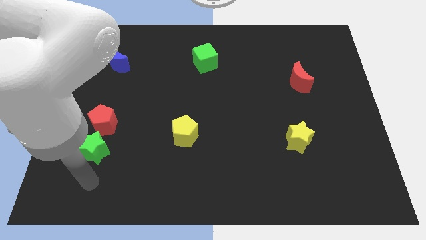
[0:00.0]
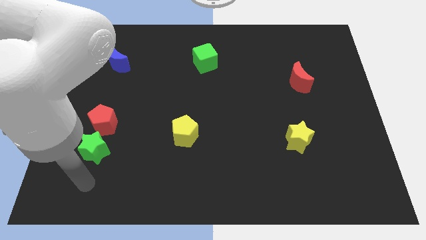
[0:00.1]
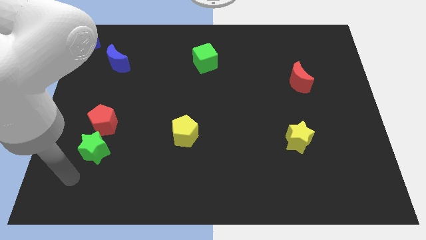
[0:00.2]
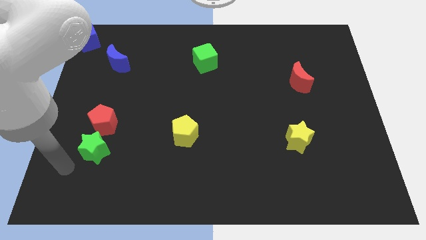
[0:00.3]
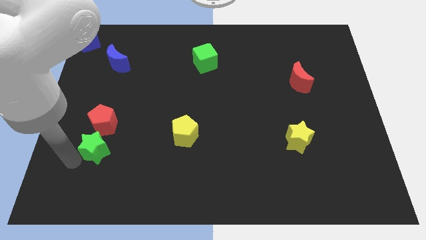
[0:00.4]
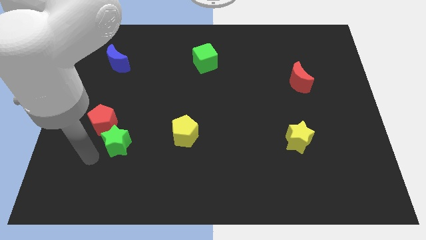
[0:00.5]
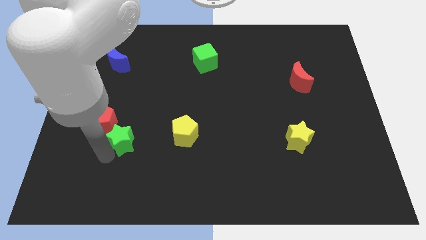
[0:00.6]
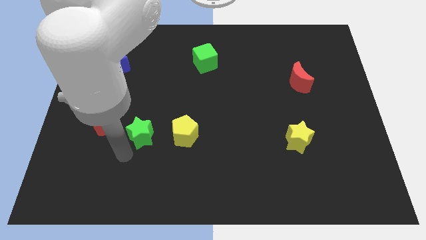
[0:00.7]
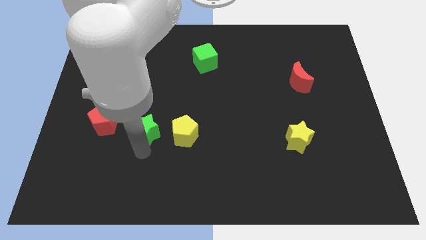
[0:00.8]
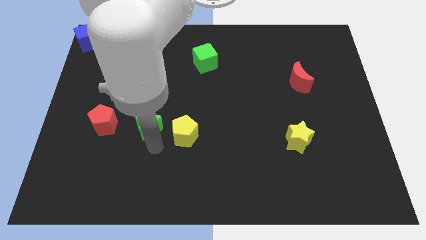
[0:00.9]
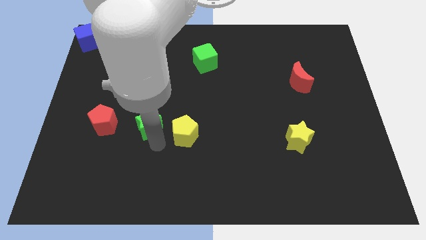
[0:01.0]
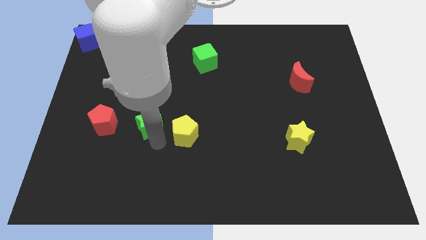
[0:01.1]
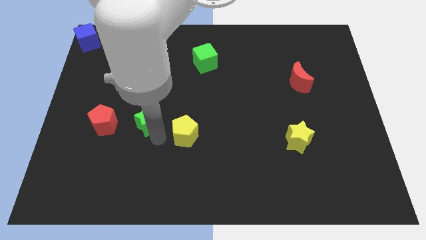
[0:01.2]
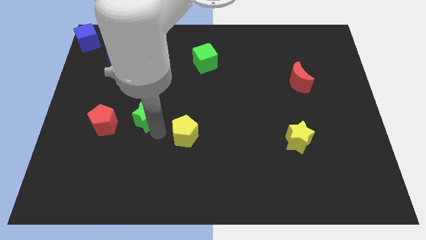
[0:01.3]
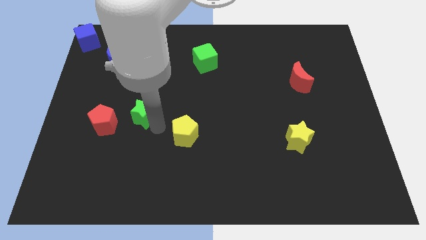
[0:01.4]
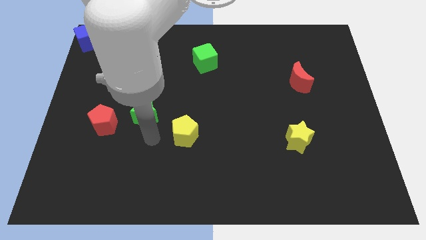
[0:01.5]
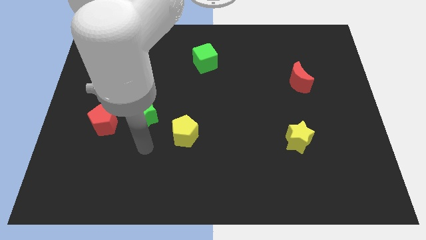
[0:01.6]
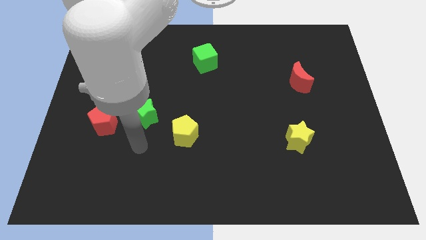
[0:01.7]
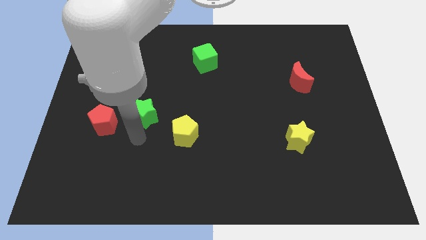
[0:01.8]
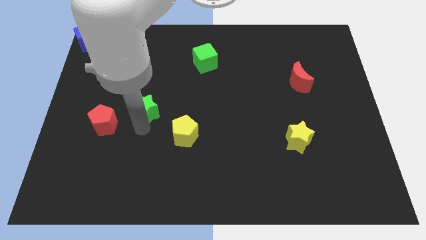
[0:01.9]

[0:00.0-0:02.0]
move the green star diagonally top right to the red pentagon

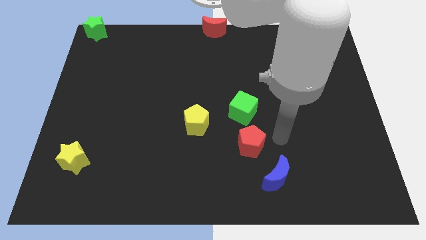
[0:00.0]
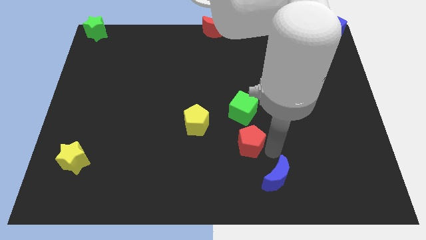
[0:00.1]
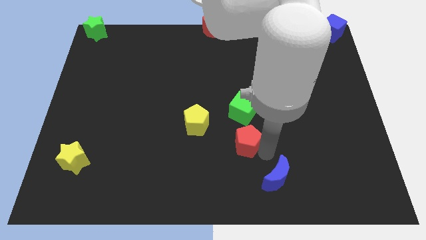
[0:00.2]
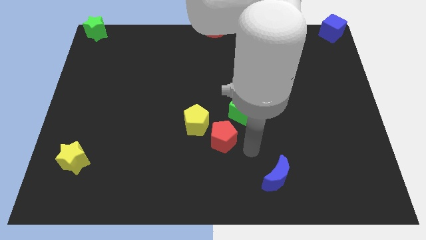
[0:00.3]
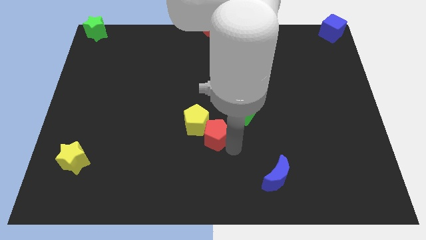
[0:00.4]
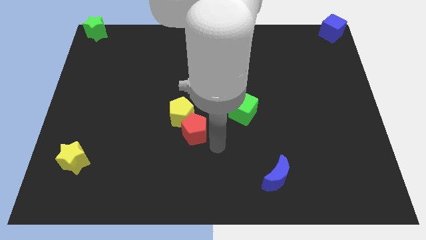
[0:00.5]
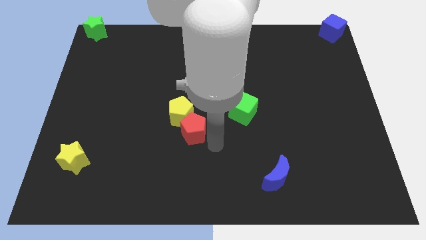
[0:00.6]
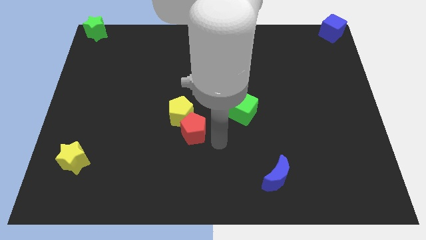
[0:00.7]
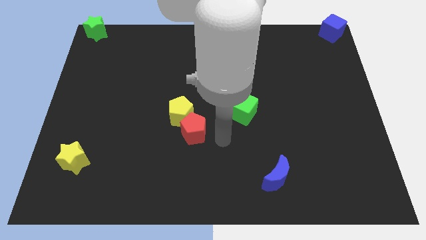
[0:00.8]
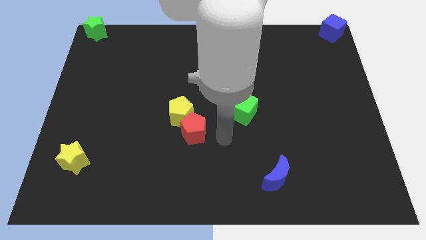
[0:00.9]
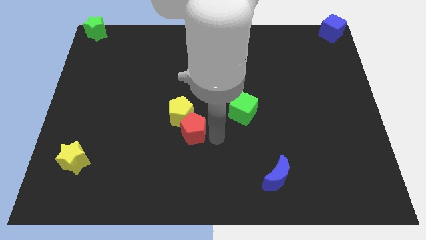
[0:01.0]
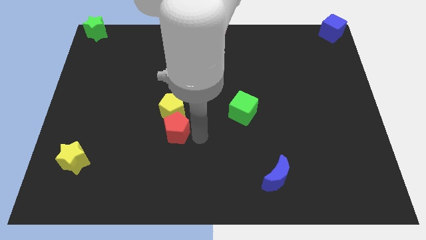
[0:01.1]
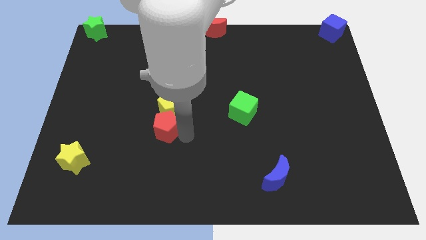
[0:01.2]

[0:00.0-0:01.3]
place the red pentagon below the yellow pentagon

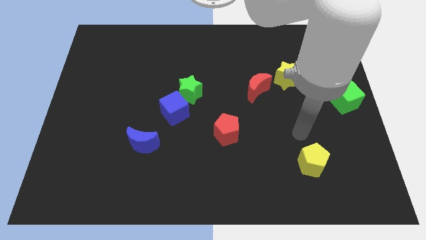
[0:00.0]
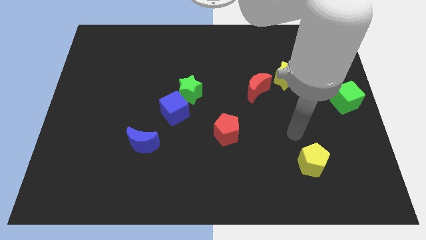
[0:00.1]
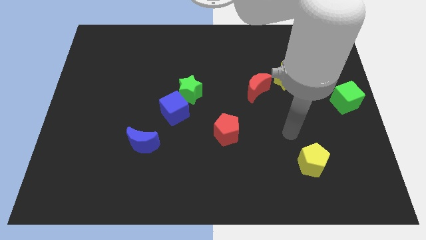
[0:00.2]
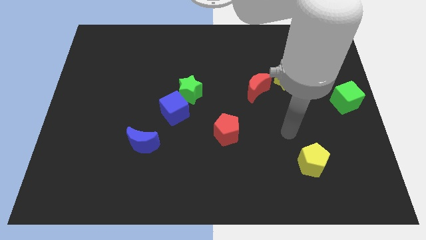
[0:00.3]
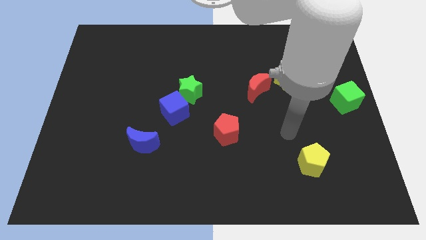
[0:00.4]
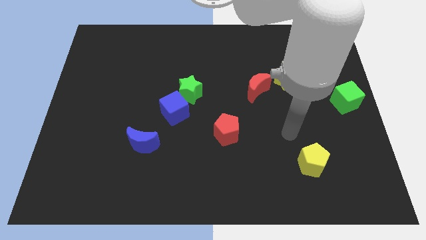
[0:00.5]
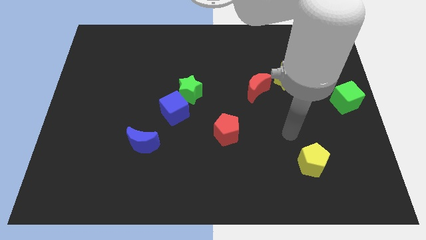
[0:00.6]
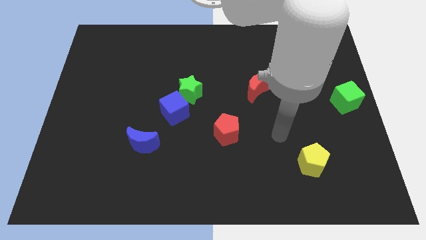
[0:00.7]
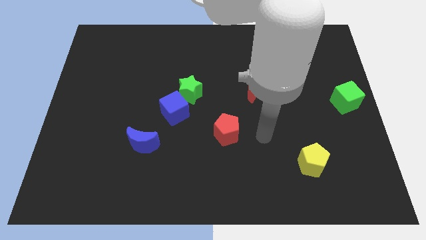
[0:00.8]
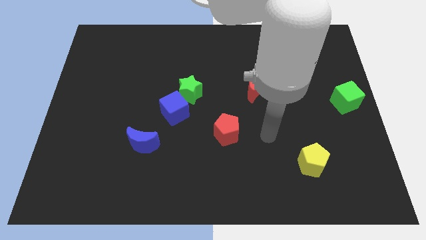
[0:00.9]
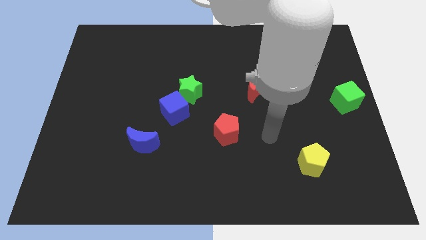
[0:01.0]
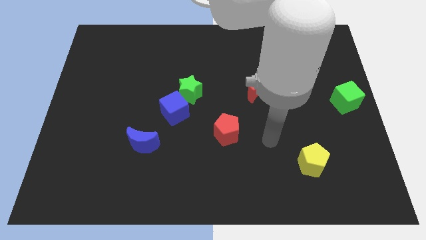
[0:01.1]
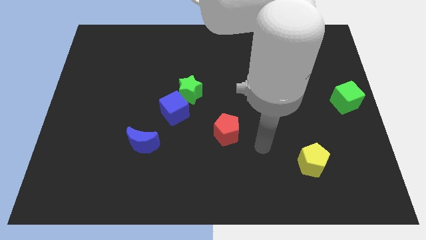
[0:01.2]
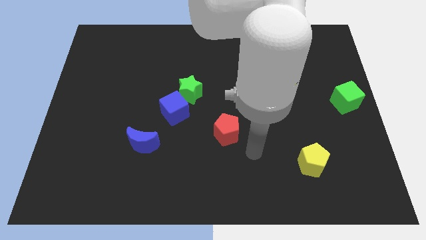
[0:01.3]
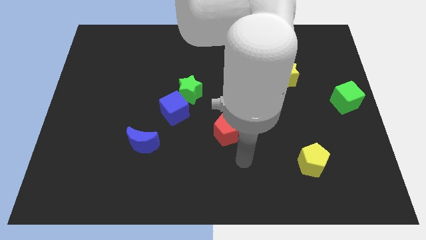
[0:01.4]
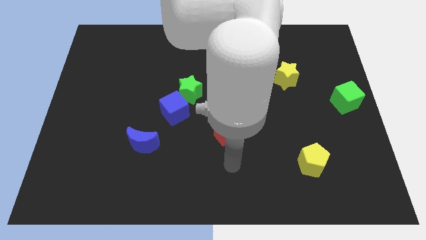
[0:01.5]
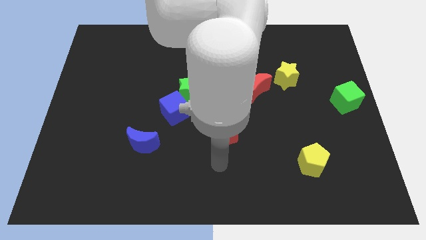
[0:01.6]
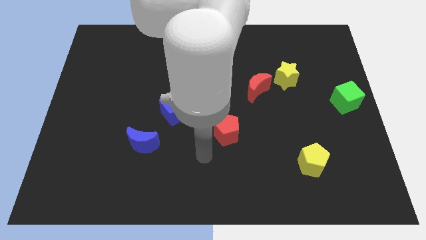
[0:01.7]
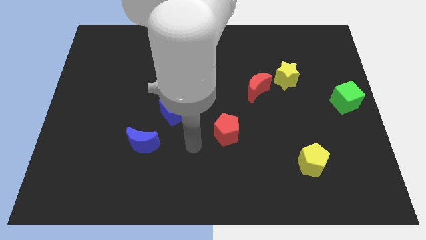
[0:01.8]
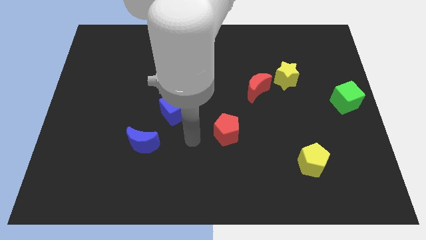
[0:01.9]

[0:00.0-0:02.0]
move the arm in between the red pentagon and blue crescent

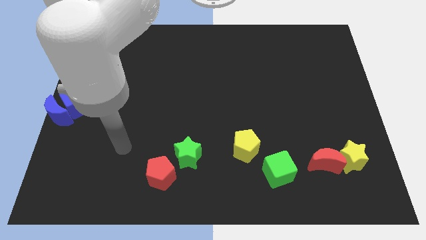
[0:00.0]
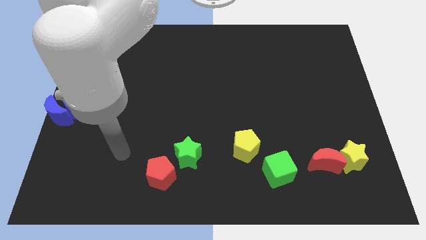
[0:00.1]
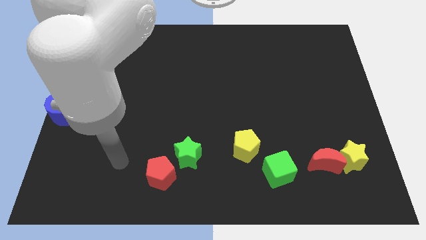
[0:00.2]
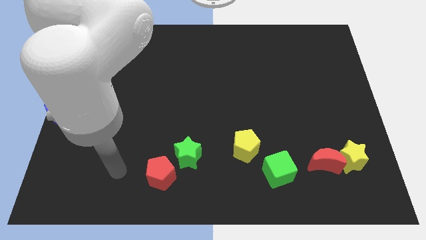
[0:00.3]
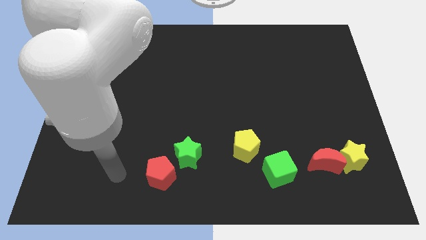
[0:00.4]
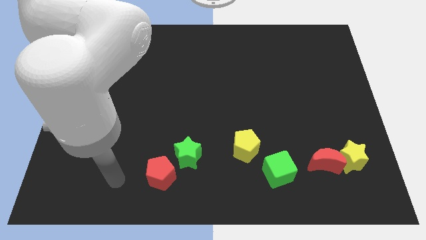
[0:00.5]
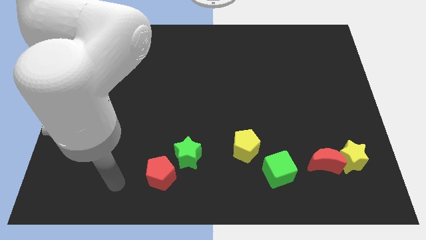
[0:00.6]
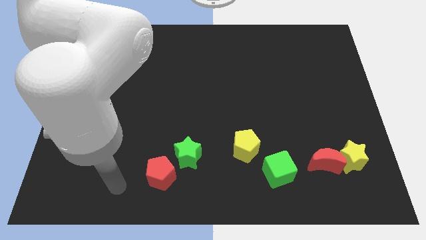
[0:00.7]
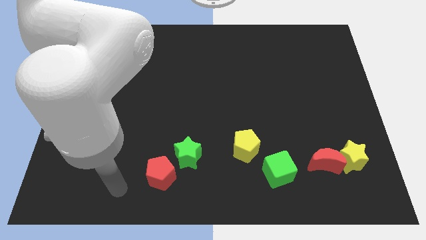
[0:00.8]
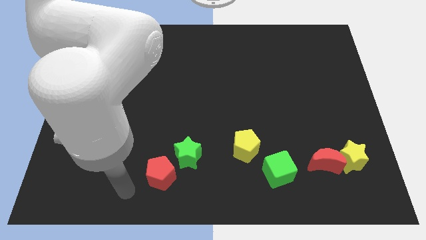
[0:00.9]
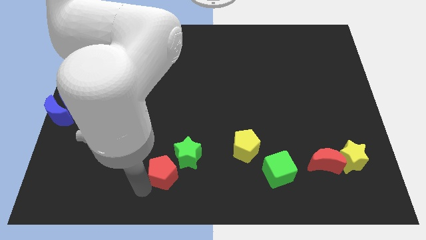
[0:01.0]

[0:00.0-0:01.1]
move the arm to the left of red pentagon

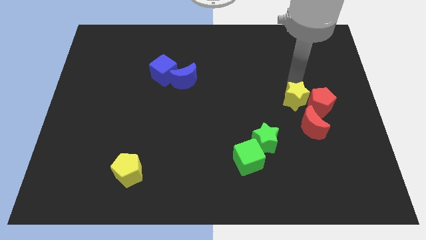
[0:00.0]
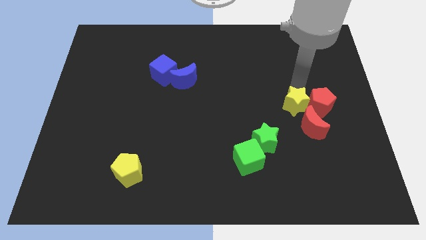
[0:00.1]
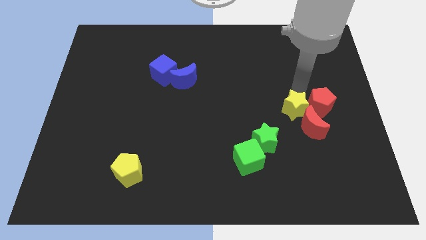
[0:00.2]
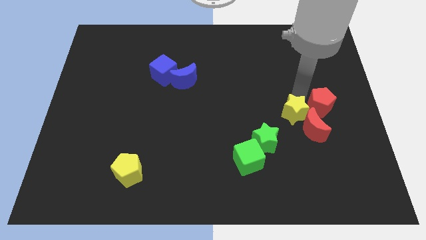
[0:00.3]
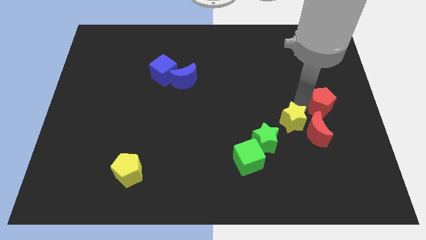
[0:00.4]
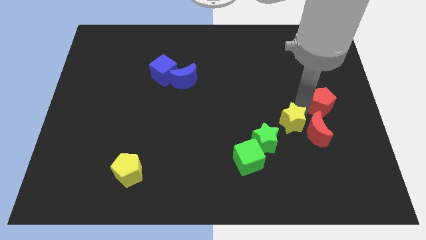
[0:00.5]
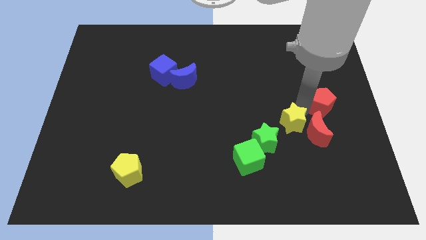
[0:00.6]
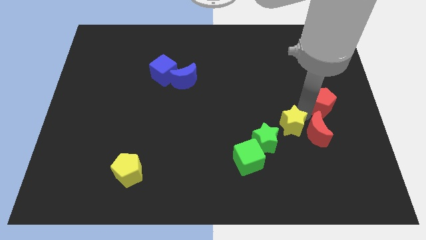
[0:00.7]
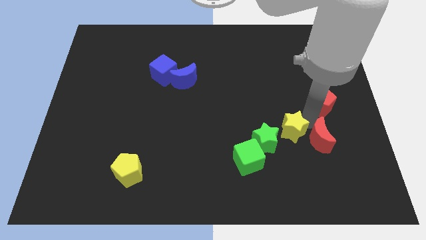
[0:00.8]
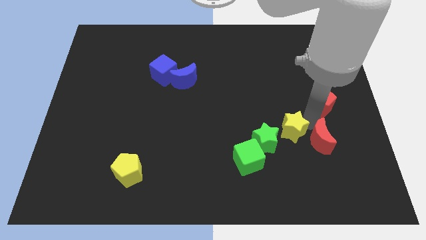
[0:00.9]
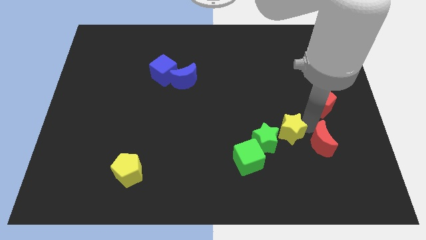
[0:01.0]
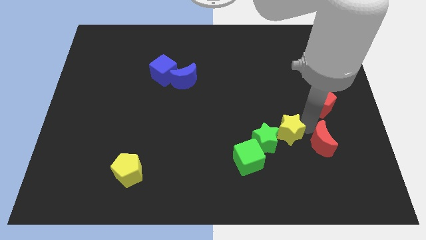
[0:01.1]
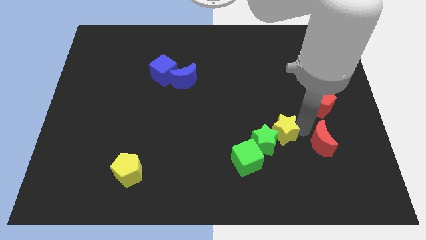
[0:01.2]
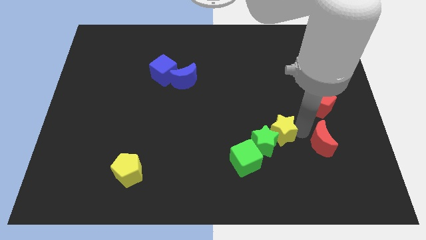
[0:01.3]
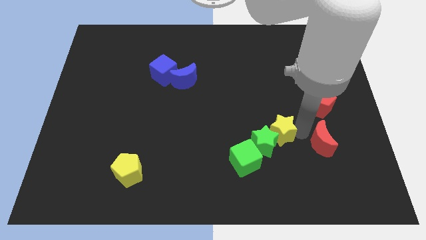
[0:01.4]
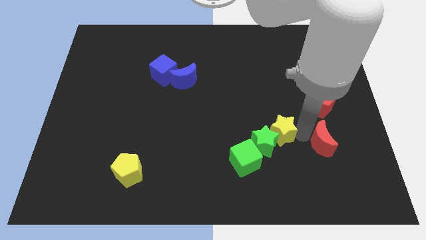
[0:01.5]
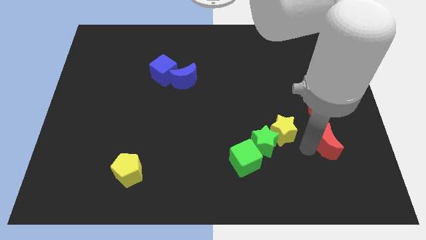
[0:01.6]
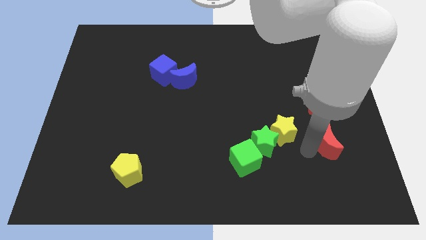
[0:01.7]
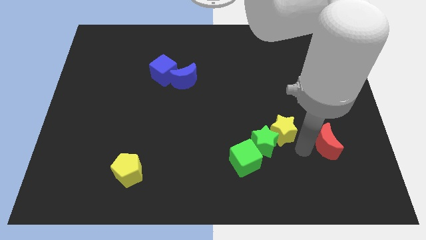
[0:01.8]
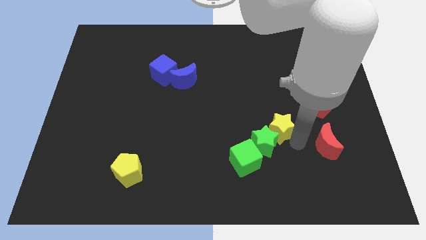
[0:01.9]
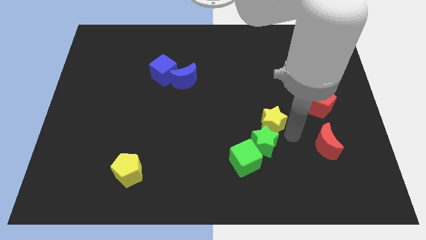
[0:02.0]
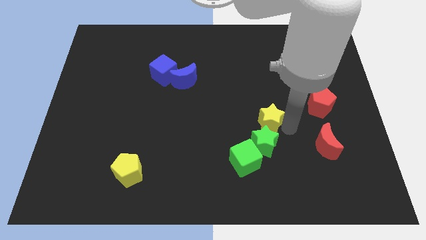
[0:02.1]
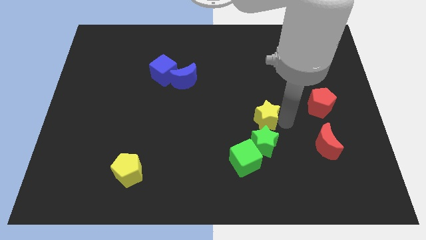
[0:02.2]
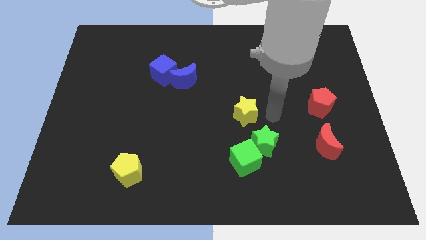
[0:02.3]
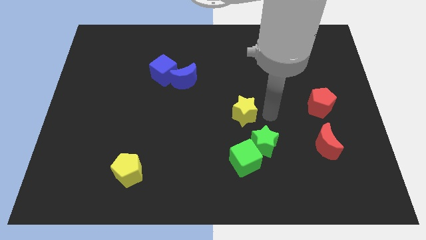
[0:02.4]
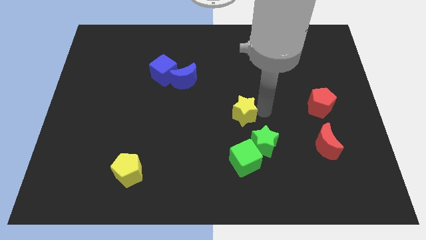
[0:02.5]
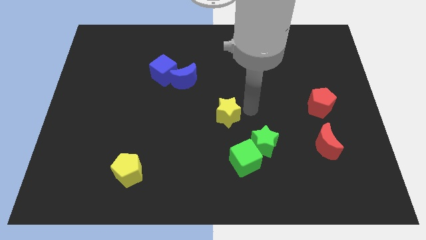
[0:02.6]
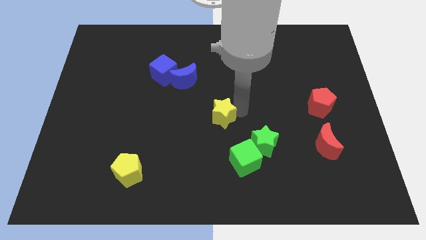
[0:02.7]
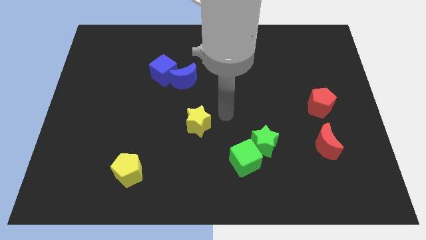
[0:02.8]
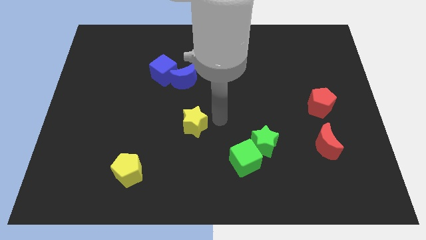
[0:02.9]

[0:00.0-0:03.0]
push the yellow star towards the yellow pentagon
